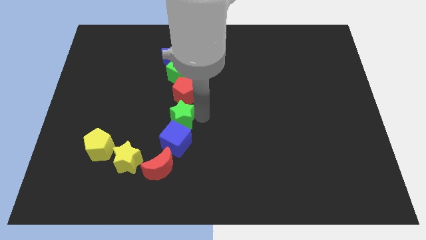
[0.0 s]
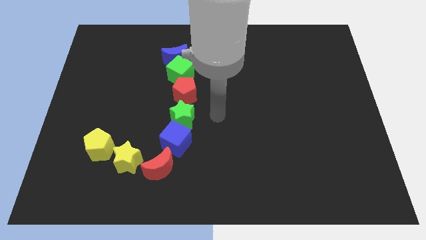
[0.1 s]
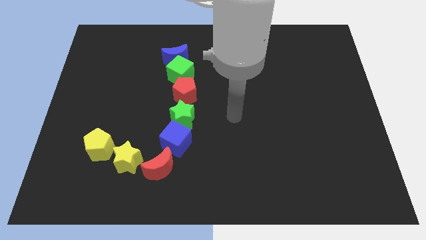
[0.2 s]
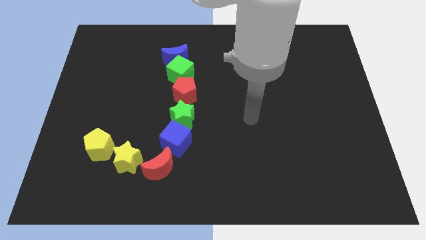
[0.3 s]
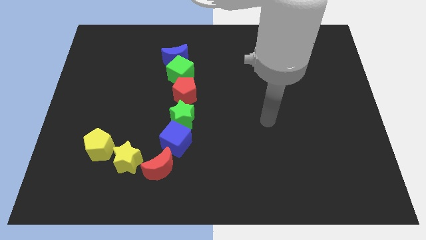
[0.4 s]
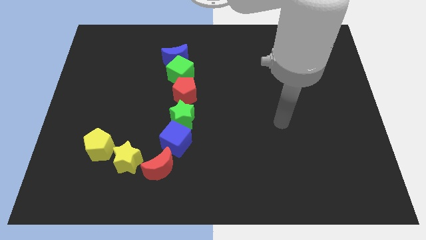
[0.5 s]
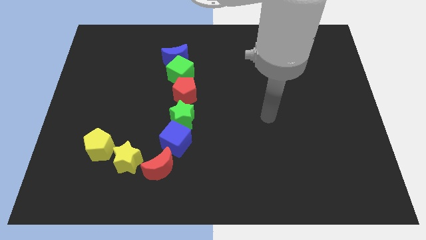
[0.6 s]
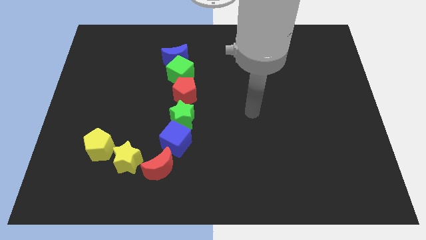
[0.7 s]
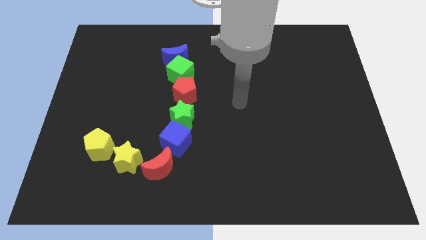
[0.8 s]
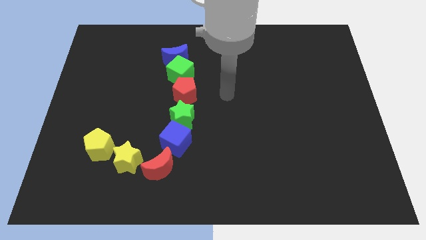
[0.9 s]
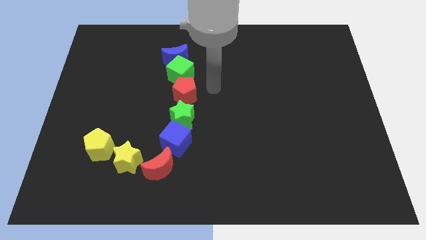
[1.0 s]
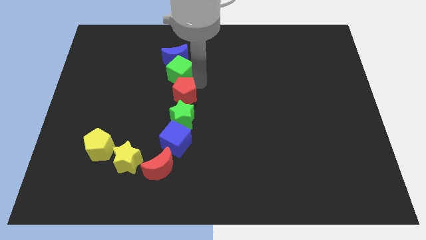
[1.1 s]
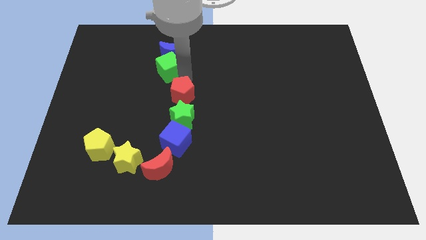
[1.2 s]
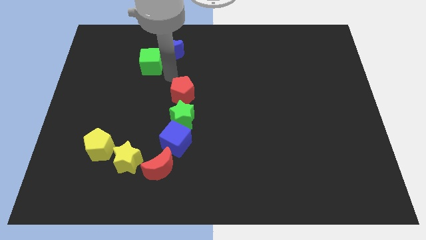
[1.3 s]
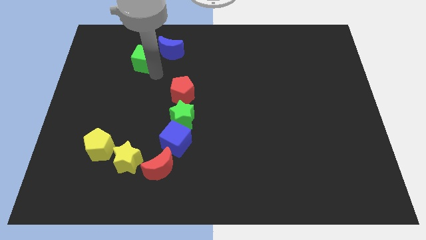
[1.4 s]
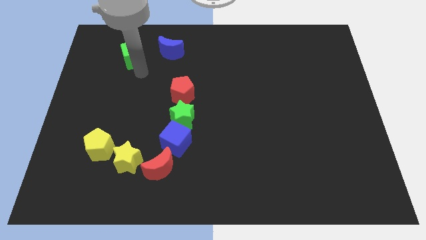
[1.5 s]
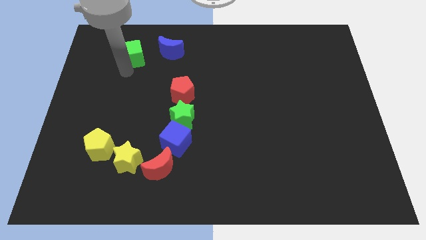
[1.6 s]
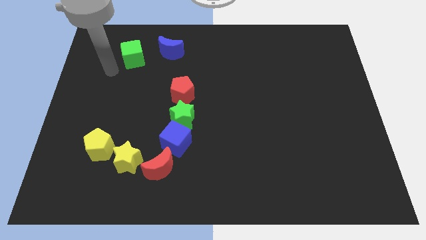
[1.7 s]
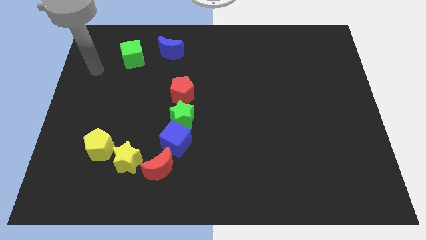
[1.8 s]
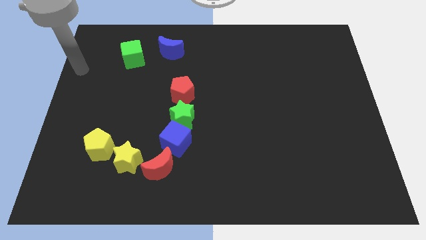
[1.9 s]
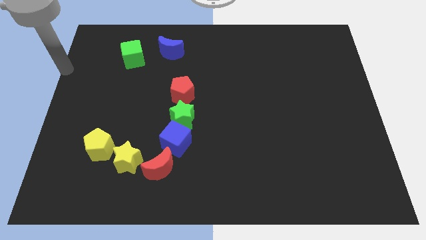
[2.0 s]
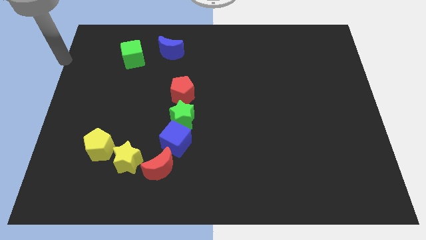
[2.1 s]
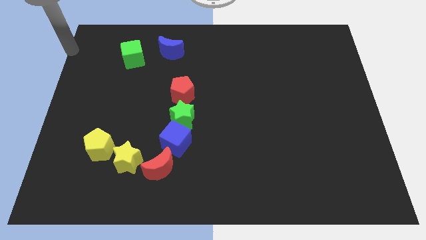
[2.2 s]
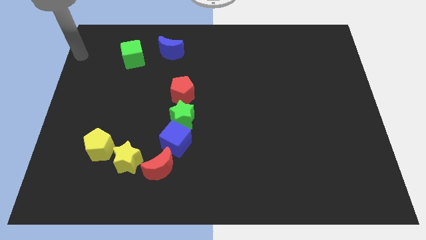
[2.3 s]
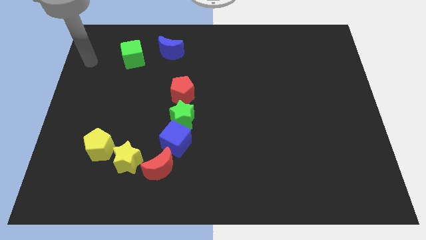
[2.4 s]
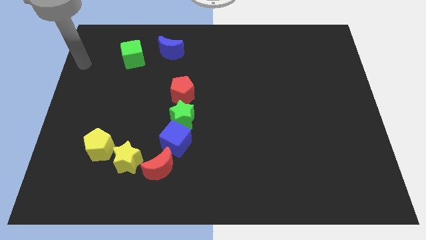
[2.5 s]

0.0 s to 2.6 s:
separate the green cube from line of blocks

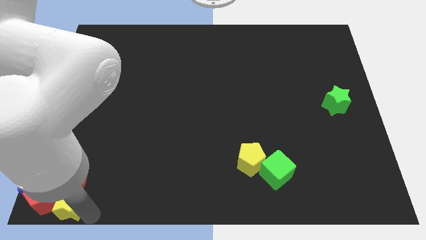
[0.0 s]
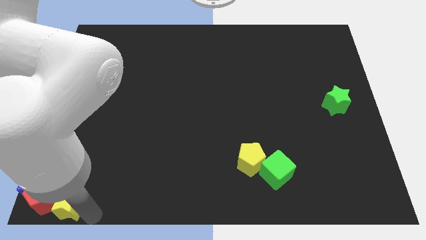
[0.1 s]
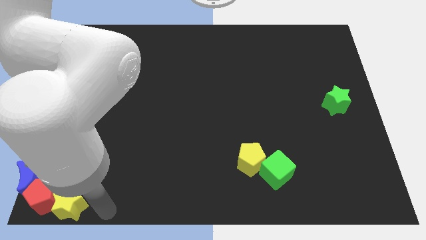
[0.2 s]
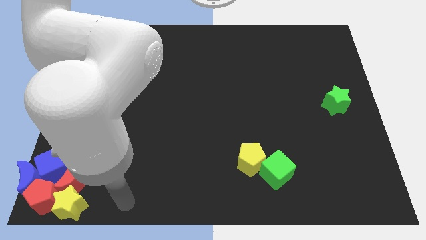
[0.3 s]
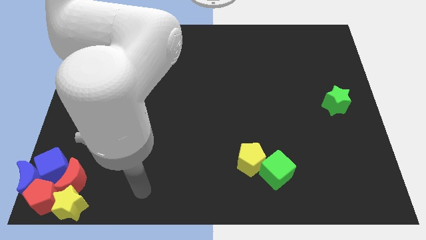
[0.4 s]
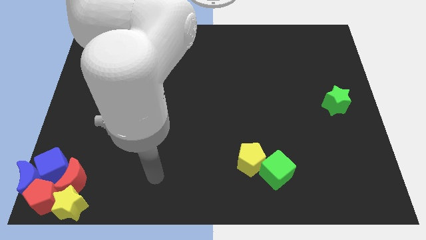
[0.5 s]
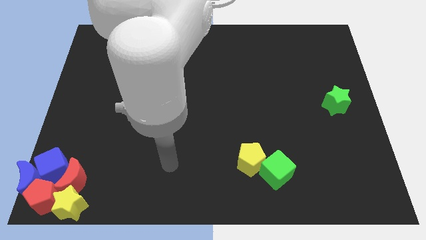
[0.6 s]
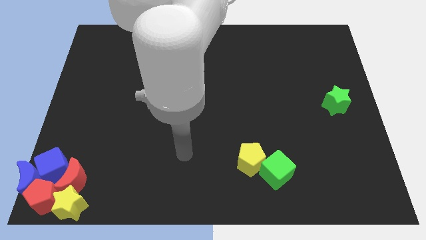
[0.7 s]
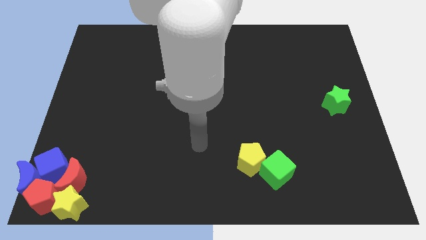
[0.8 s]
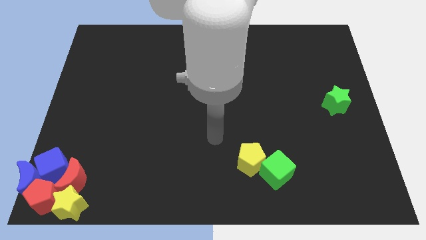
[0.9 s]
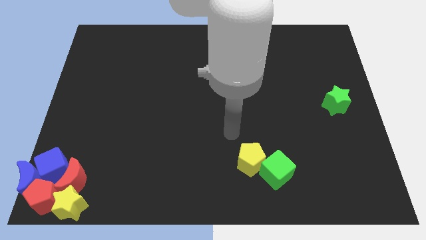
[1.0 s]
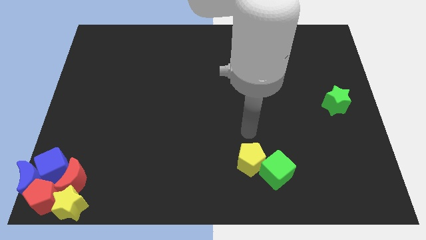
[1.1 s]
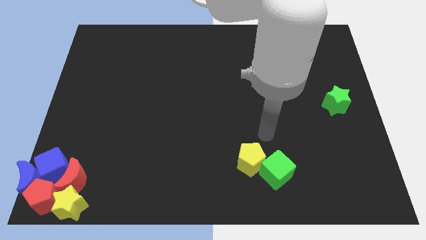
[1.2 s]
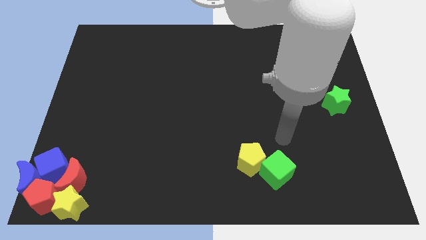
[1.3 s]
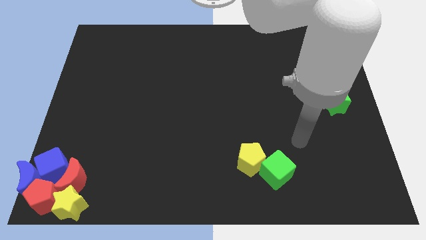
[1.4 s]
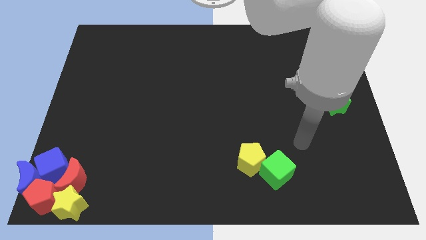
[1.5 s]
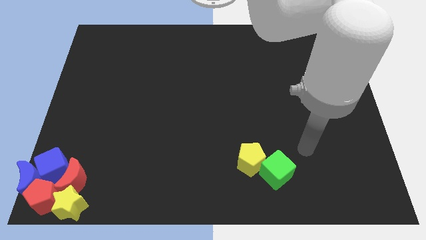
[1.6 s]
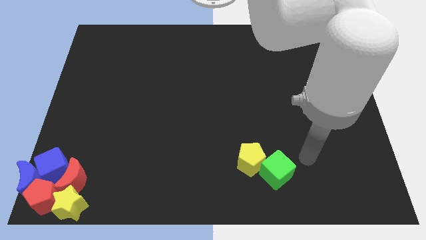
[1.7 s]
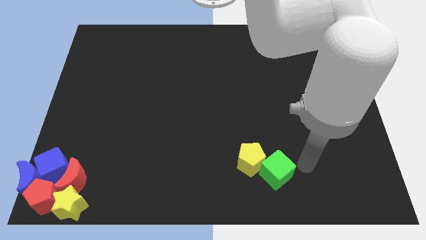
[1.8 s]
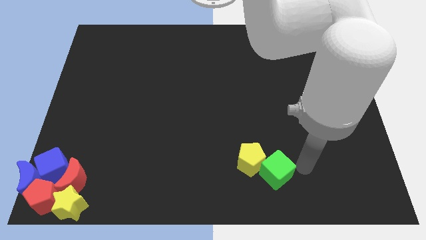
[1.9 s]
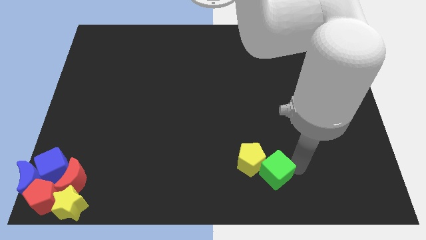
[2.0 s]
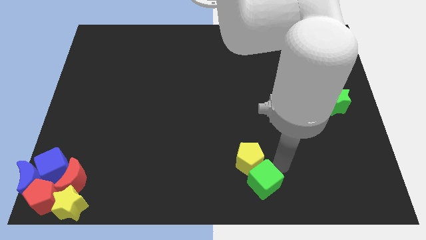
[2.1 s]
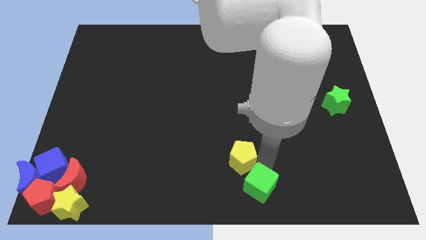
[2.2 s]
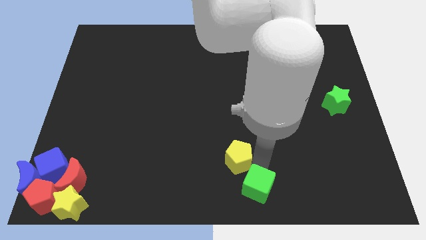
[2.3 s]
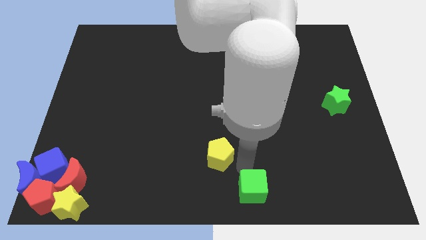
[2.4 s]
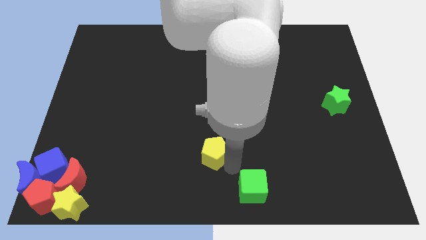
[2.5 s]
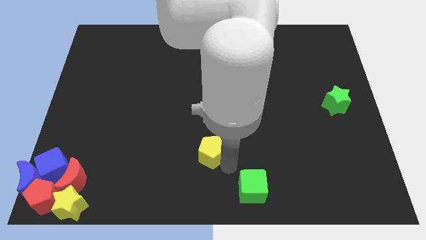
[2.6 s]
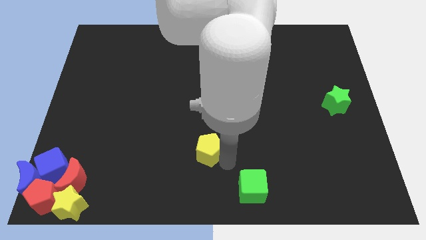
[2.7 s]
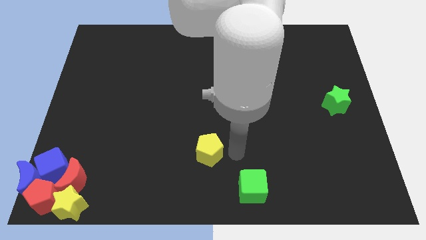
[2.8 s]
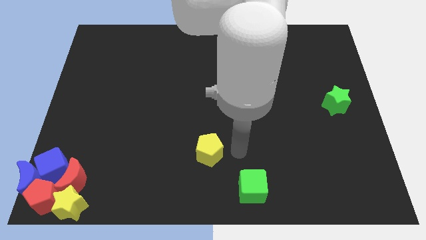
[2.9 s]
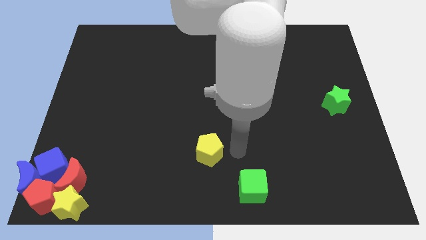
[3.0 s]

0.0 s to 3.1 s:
place the yellow pentagon diagonally at the top left side of the green cube

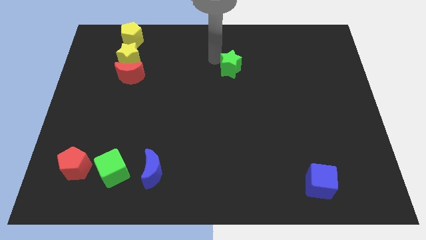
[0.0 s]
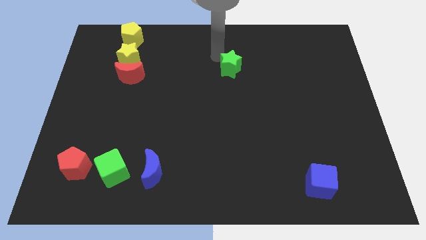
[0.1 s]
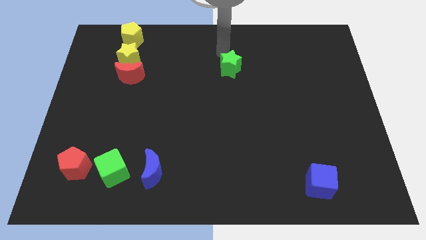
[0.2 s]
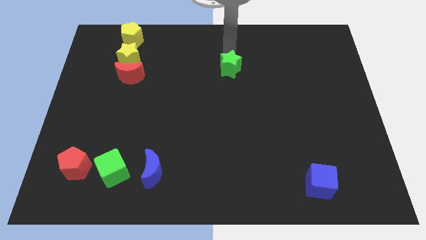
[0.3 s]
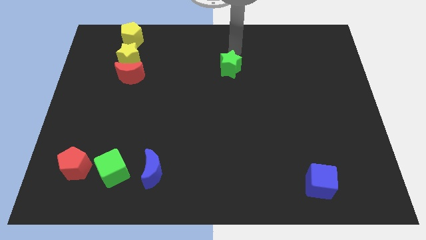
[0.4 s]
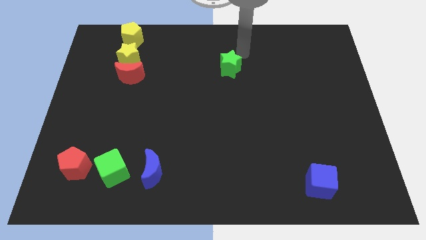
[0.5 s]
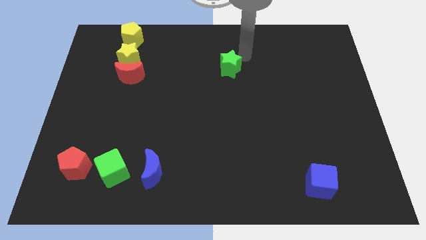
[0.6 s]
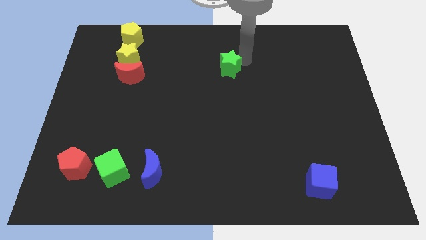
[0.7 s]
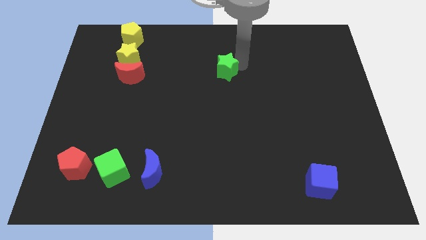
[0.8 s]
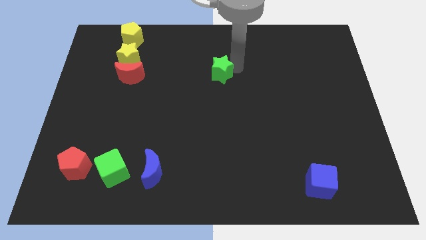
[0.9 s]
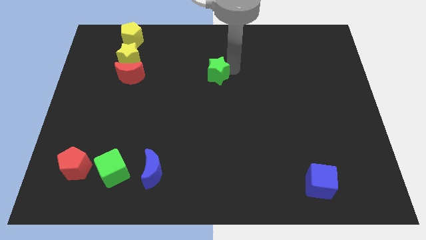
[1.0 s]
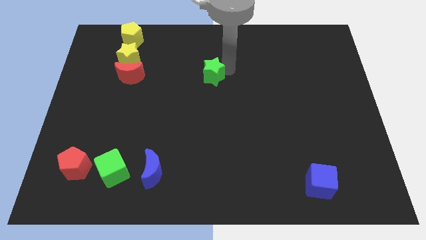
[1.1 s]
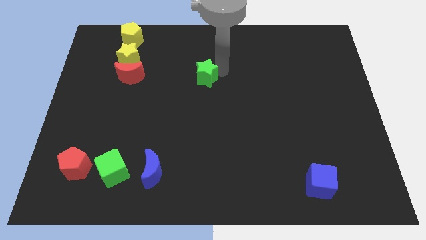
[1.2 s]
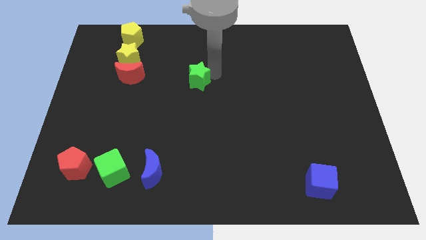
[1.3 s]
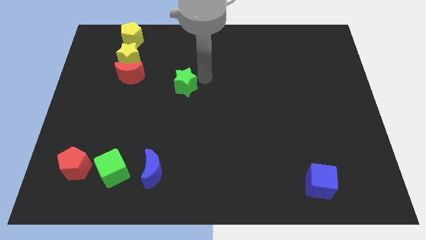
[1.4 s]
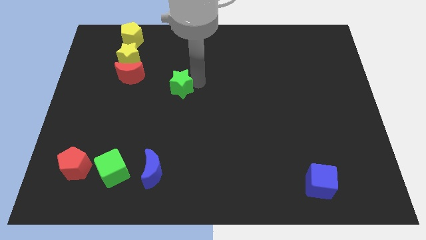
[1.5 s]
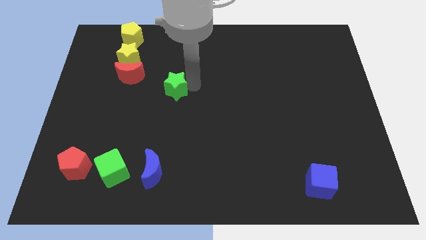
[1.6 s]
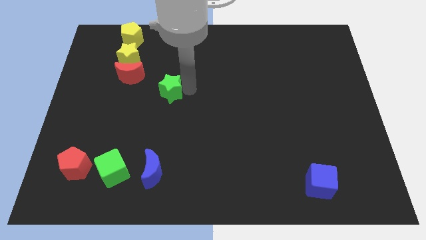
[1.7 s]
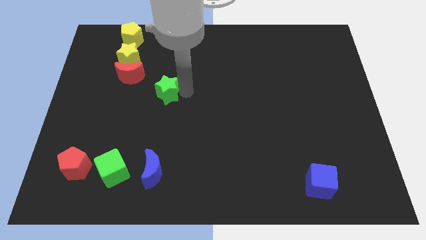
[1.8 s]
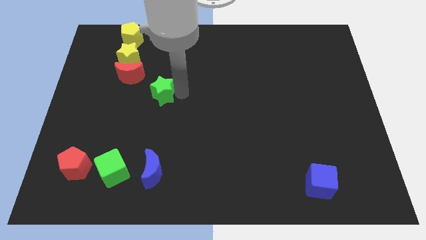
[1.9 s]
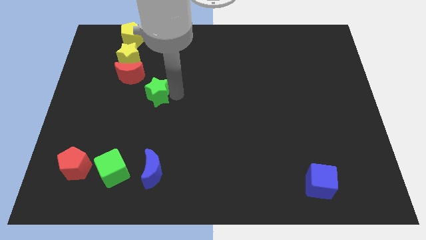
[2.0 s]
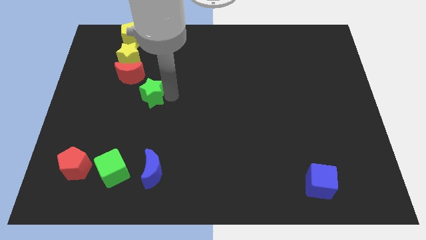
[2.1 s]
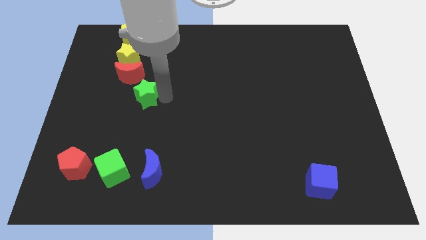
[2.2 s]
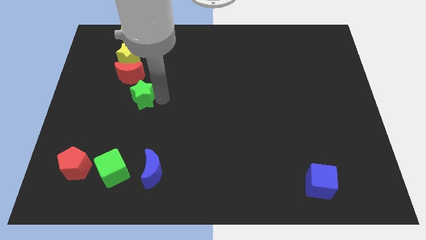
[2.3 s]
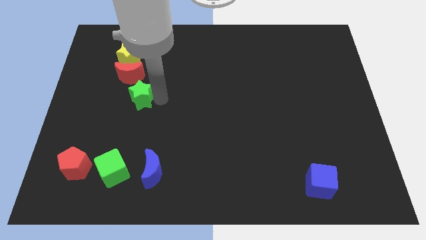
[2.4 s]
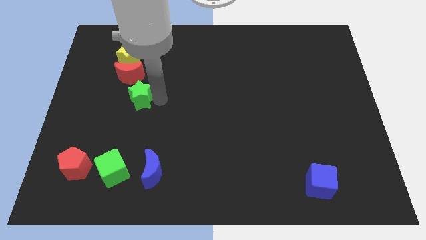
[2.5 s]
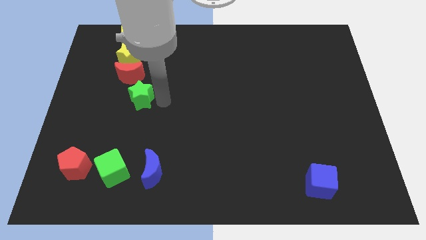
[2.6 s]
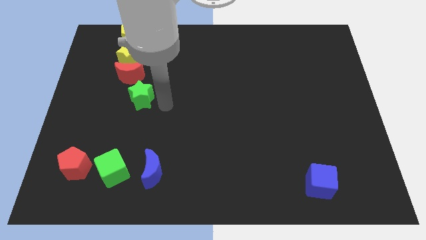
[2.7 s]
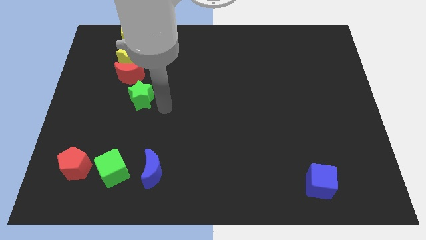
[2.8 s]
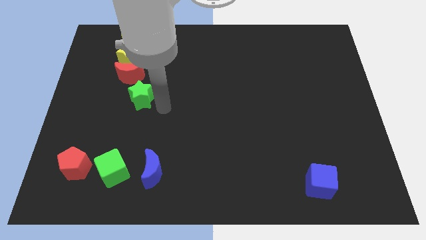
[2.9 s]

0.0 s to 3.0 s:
push the green star near the red moon

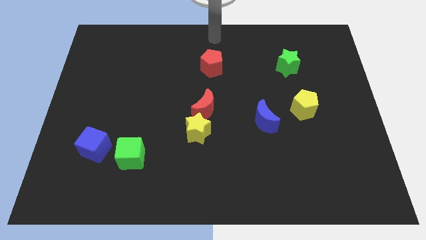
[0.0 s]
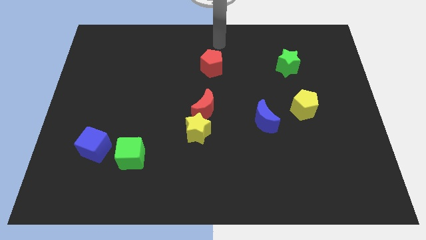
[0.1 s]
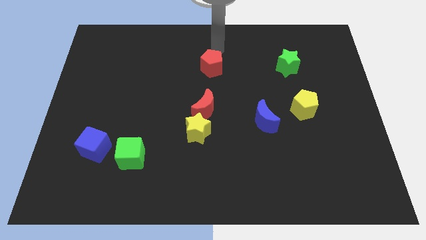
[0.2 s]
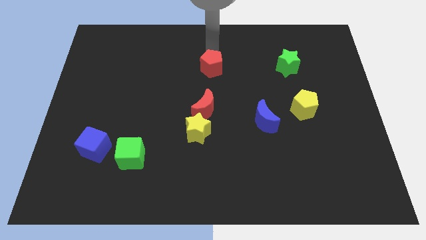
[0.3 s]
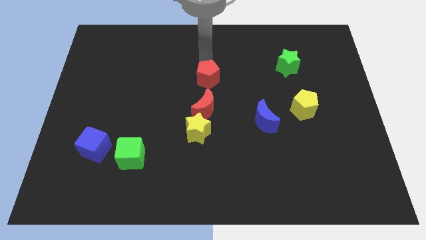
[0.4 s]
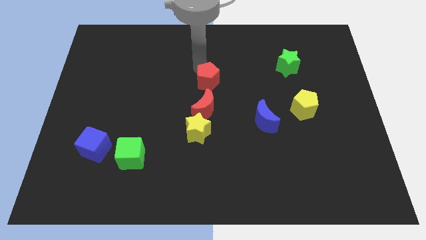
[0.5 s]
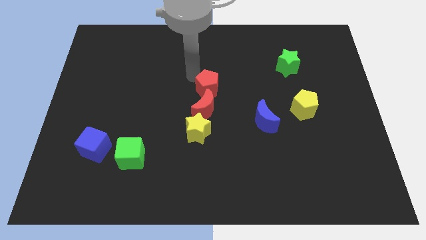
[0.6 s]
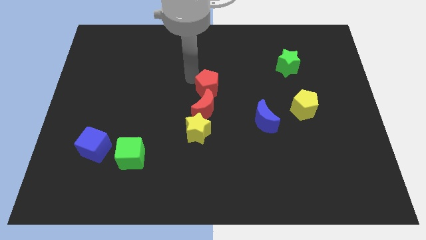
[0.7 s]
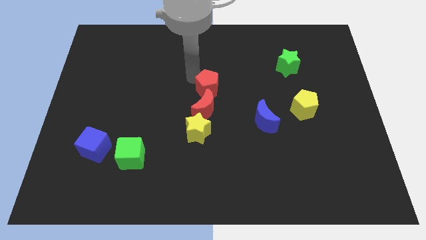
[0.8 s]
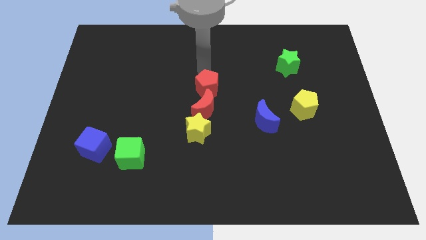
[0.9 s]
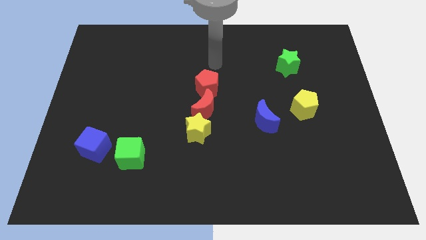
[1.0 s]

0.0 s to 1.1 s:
move the red pentagon close to the top of the red moon
